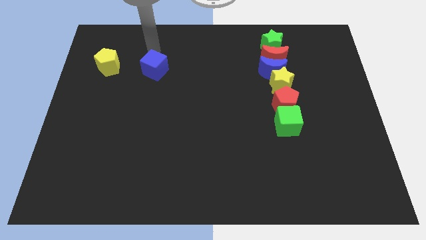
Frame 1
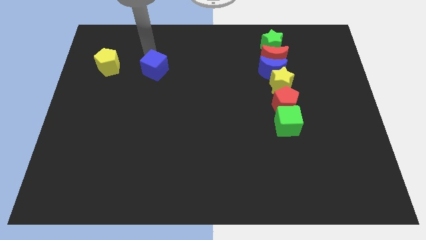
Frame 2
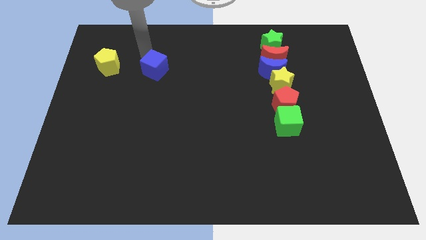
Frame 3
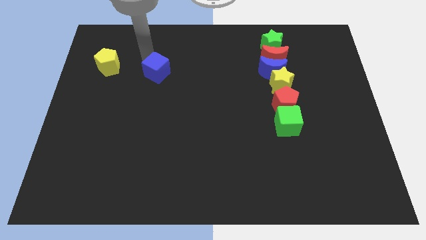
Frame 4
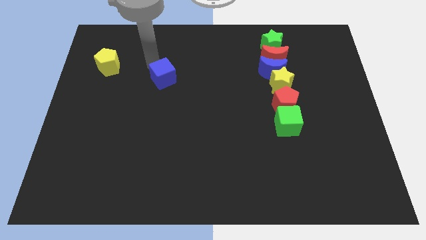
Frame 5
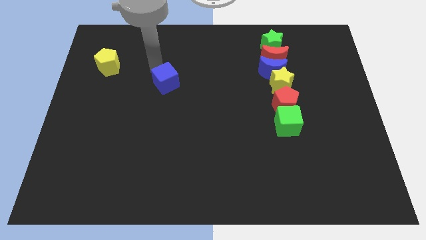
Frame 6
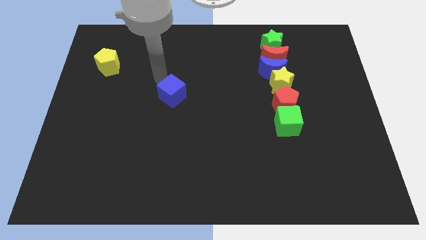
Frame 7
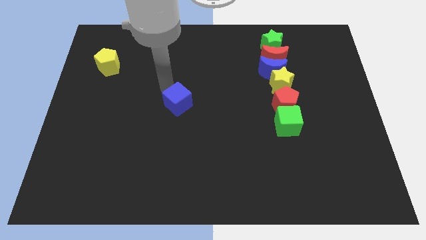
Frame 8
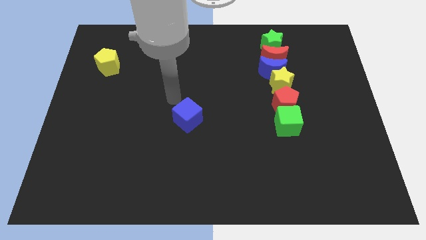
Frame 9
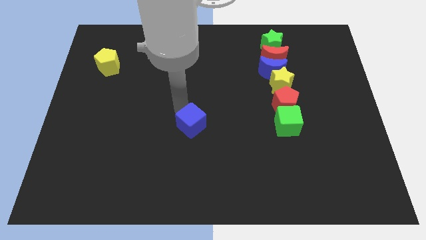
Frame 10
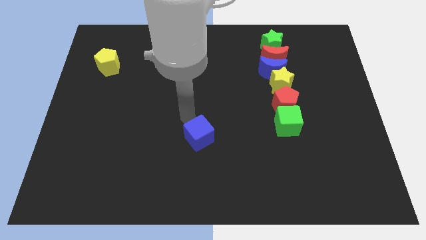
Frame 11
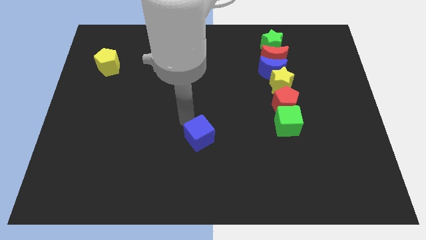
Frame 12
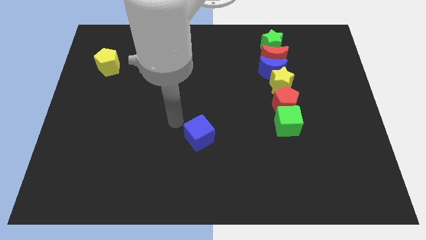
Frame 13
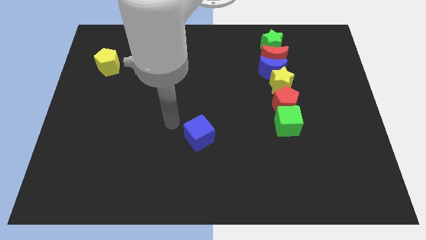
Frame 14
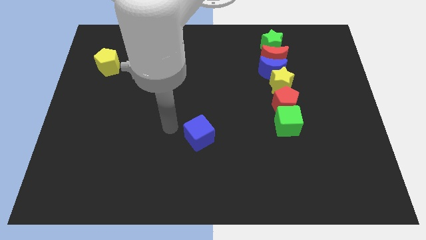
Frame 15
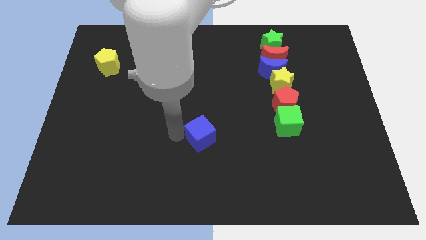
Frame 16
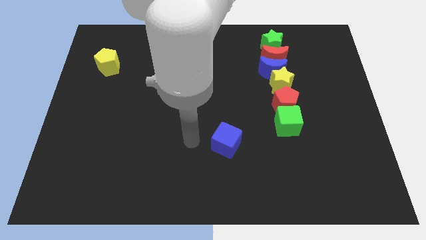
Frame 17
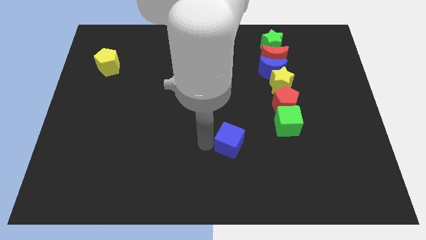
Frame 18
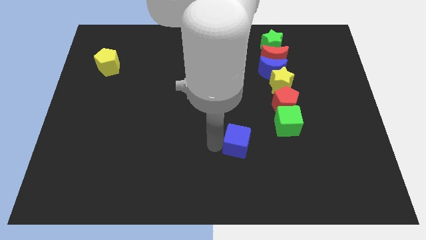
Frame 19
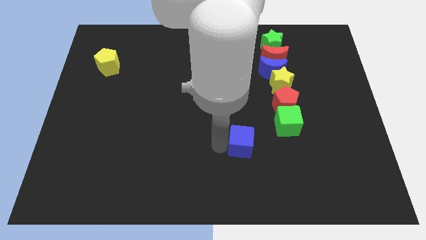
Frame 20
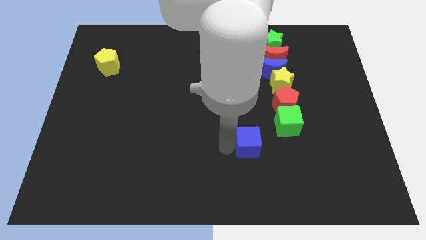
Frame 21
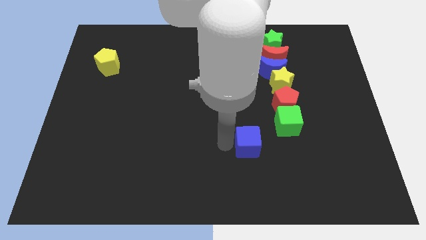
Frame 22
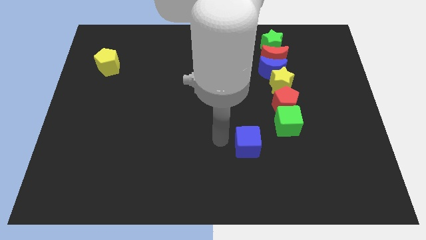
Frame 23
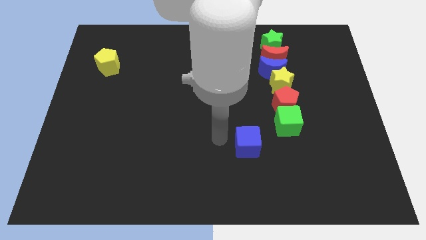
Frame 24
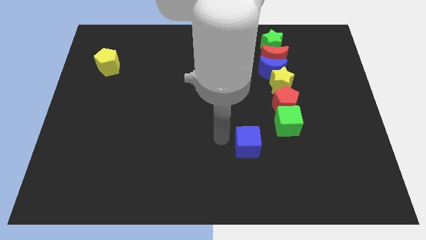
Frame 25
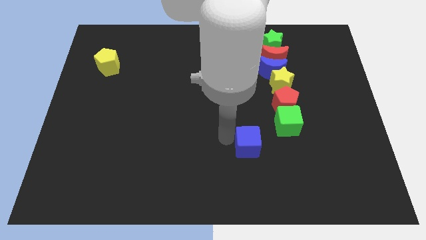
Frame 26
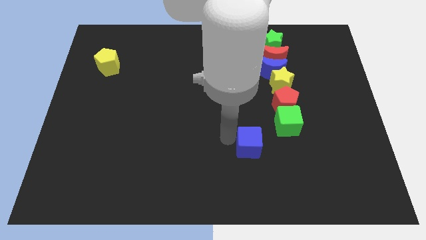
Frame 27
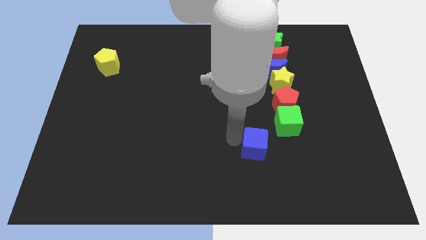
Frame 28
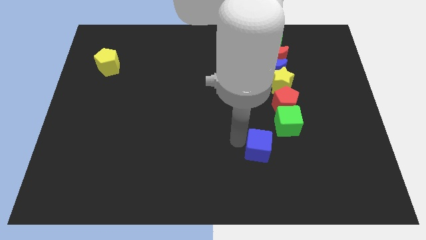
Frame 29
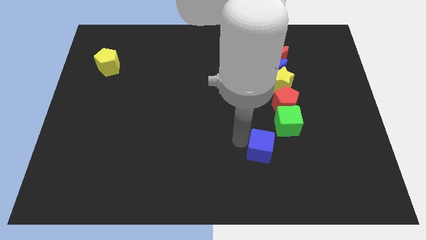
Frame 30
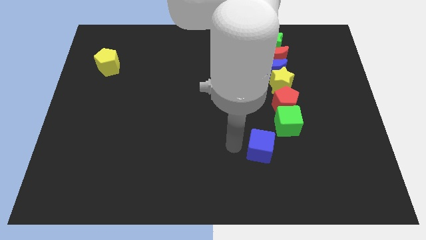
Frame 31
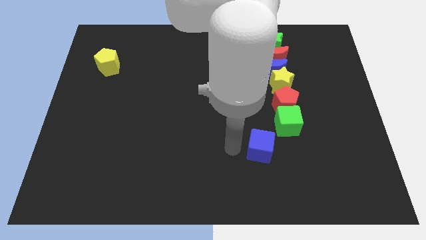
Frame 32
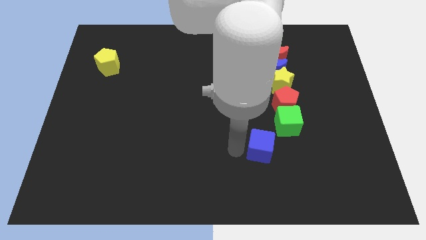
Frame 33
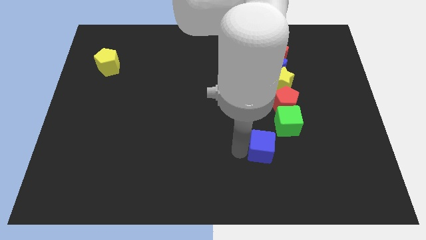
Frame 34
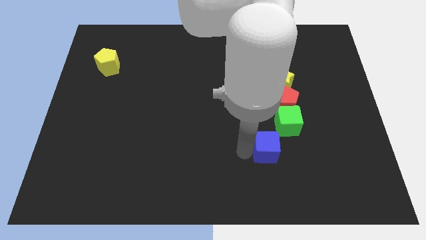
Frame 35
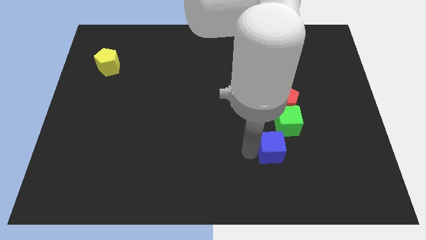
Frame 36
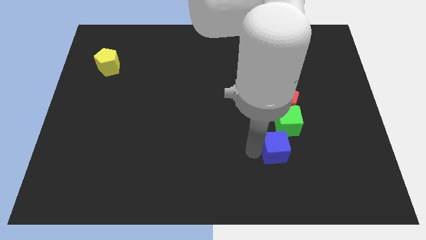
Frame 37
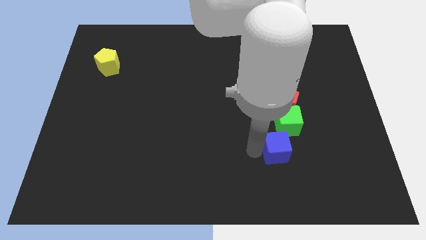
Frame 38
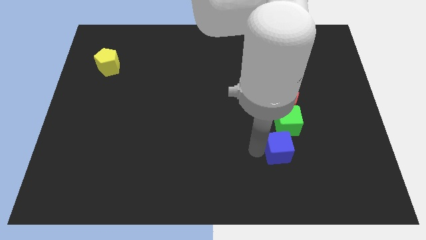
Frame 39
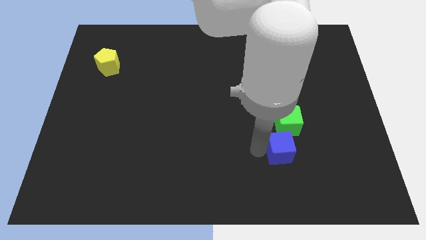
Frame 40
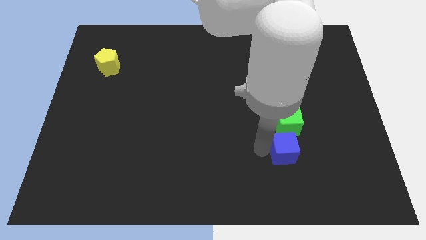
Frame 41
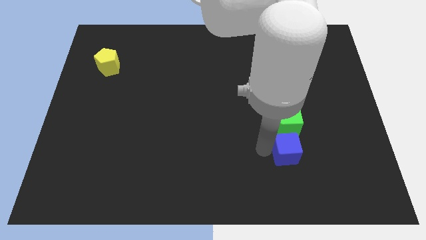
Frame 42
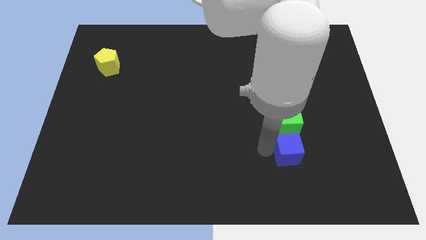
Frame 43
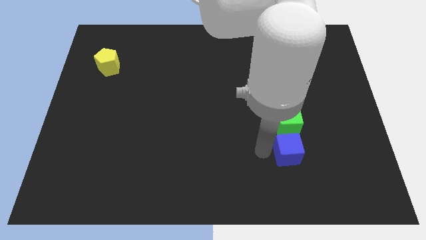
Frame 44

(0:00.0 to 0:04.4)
place blue cube below the green cube

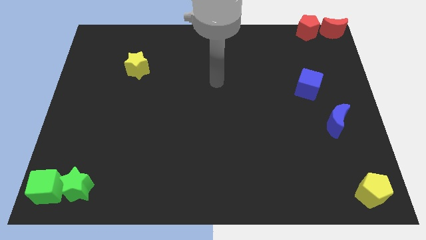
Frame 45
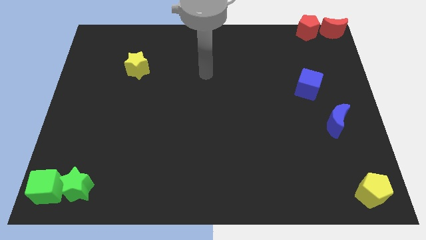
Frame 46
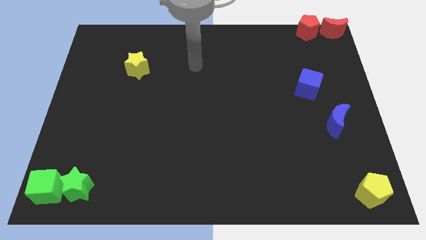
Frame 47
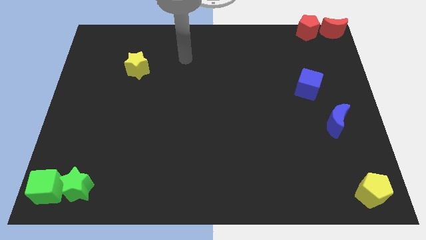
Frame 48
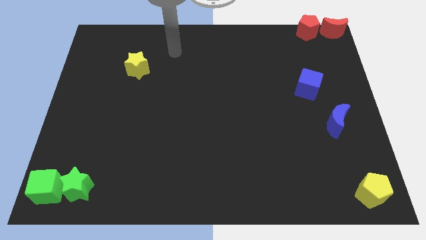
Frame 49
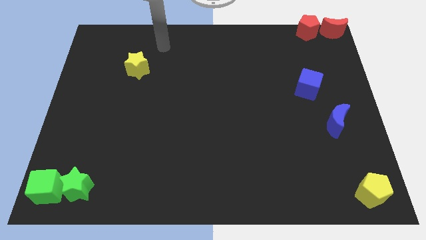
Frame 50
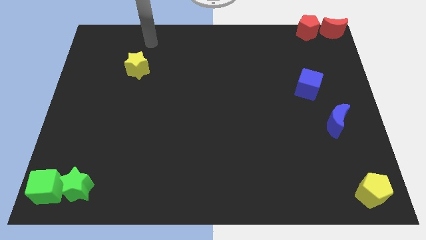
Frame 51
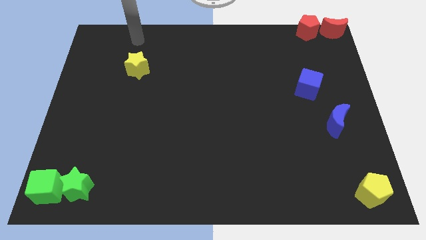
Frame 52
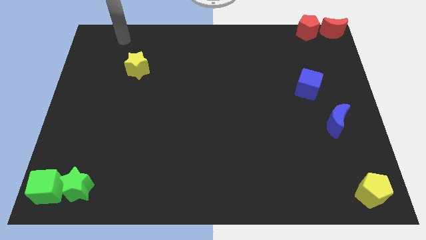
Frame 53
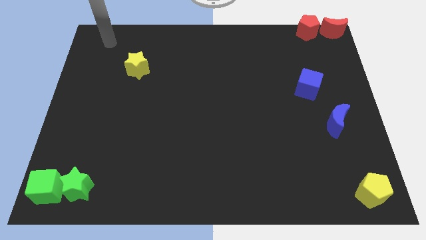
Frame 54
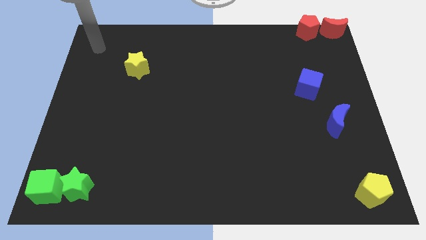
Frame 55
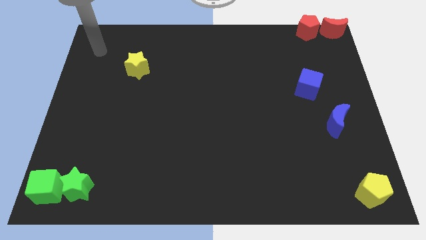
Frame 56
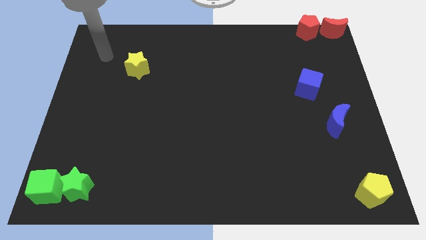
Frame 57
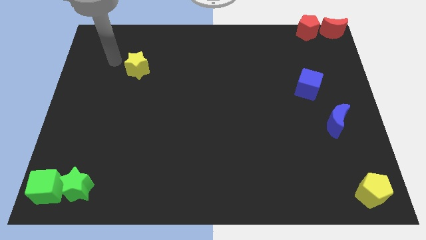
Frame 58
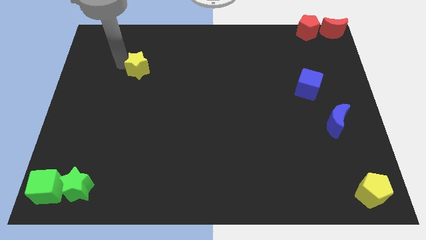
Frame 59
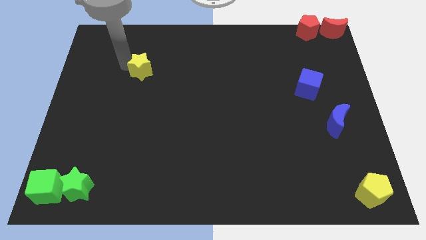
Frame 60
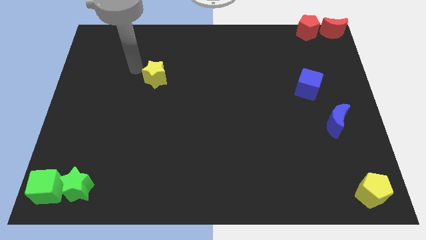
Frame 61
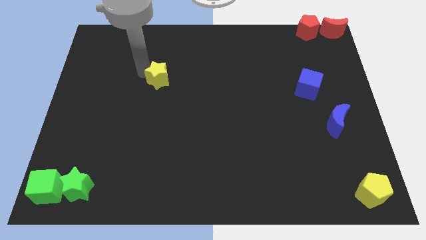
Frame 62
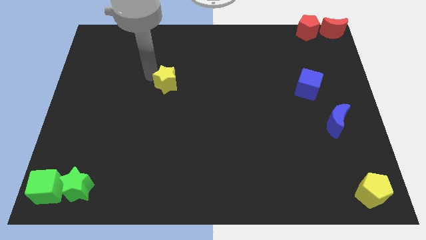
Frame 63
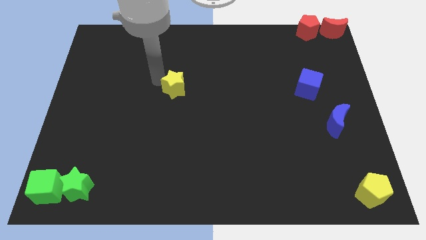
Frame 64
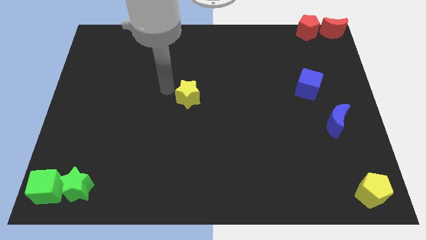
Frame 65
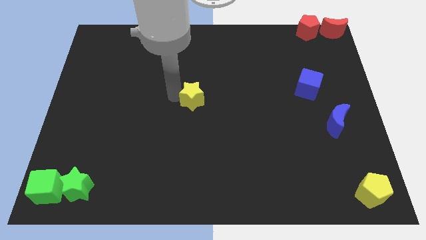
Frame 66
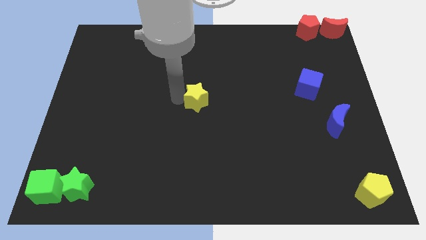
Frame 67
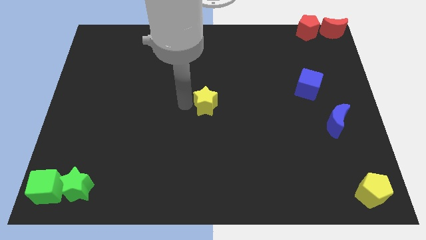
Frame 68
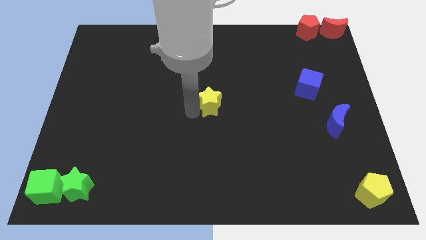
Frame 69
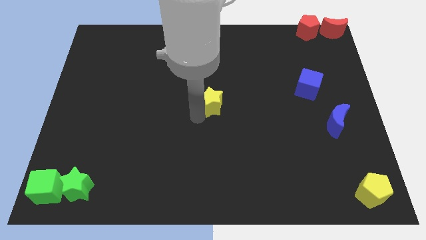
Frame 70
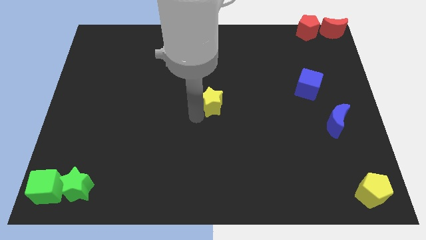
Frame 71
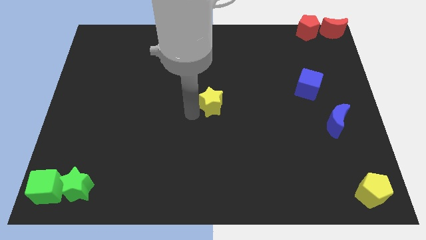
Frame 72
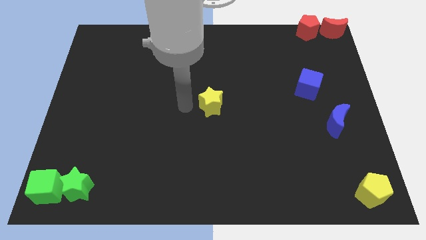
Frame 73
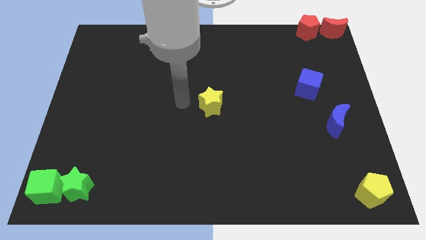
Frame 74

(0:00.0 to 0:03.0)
push the yellow star to center of the board

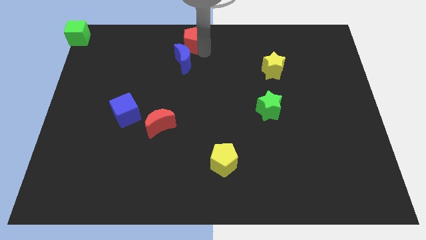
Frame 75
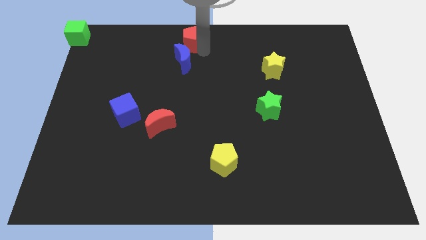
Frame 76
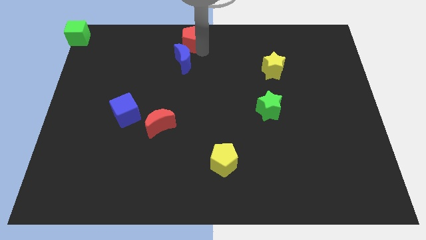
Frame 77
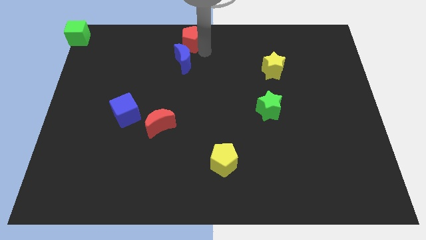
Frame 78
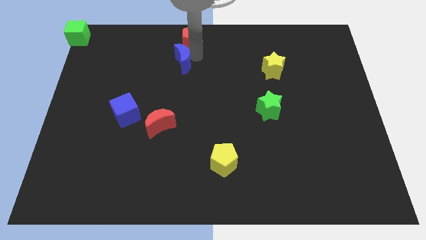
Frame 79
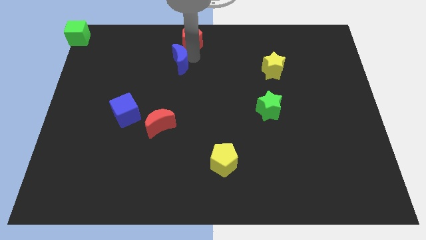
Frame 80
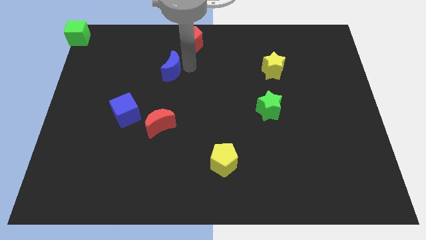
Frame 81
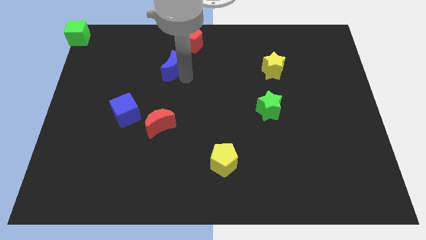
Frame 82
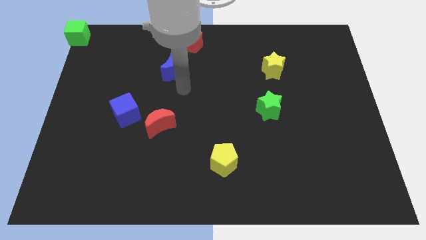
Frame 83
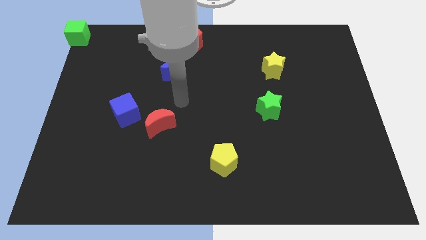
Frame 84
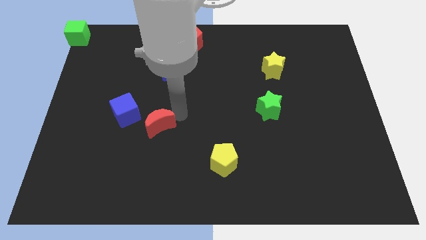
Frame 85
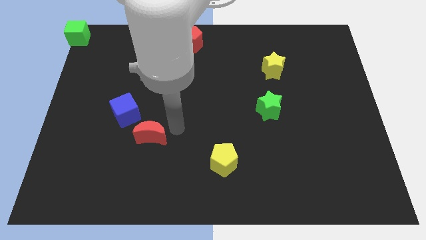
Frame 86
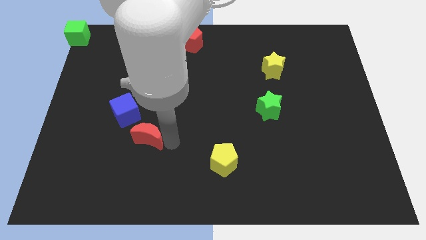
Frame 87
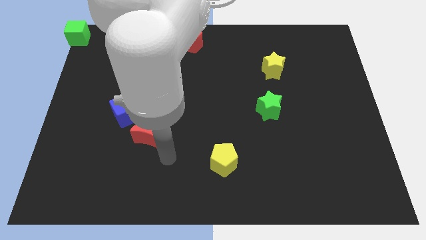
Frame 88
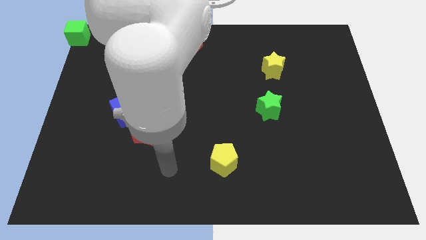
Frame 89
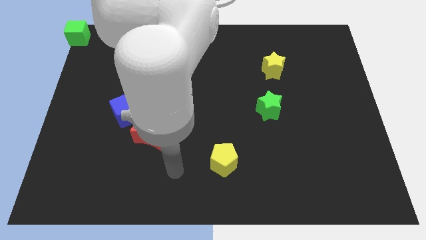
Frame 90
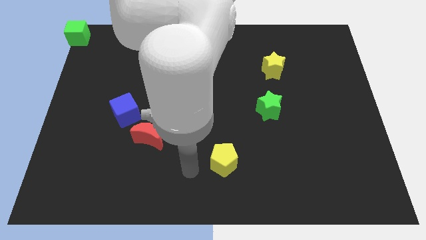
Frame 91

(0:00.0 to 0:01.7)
separate red pentagon from blue moon
